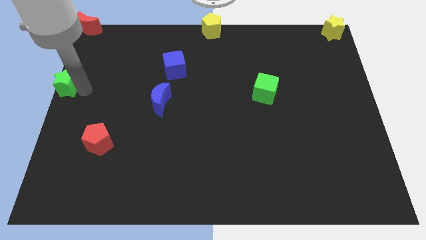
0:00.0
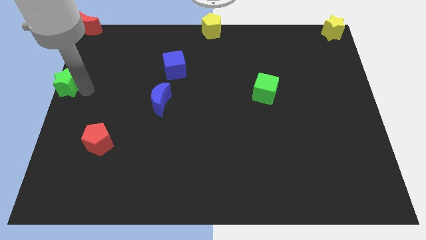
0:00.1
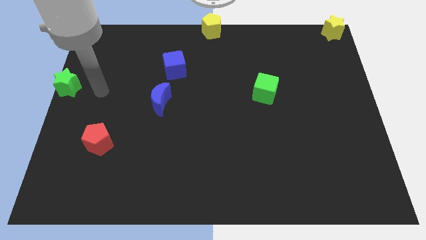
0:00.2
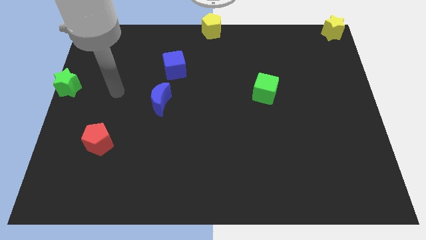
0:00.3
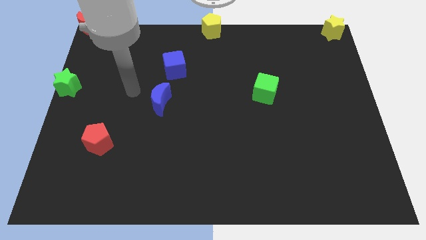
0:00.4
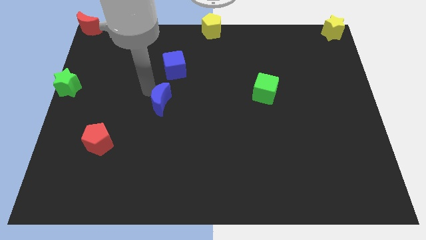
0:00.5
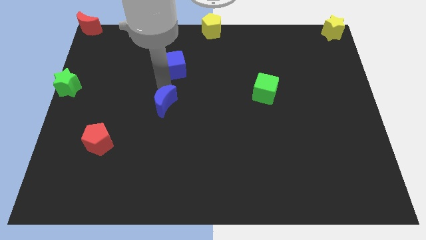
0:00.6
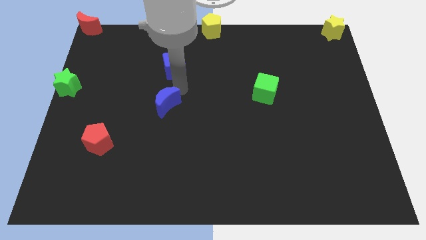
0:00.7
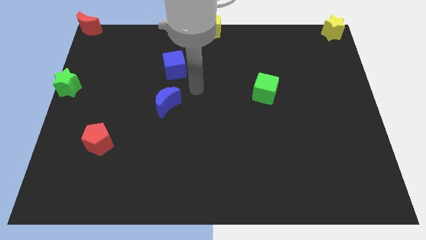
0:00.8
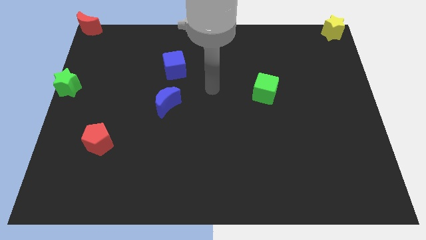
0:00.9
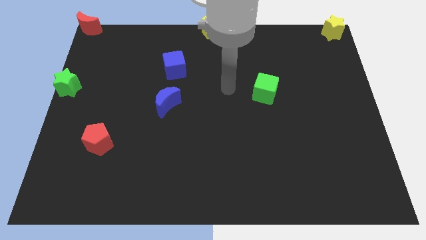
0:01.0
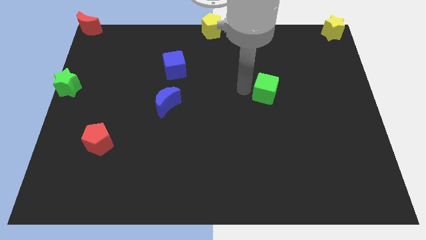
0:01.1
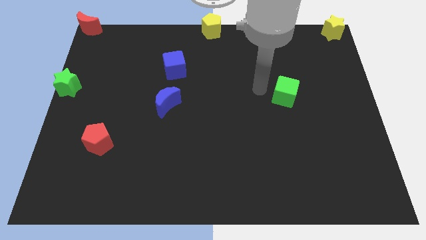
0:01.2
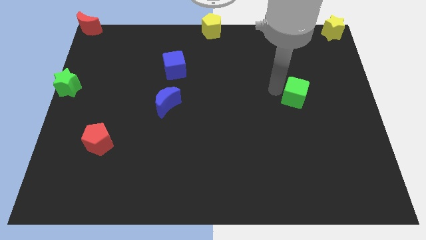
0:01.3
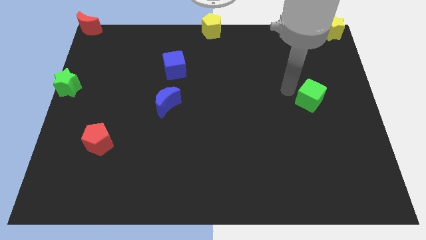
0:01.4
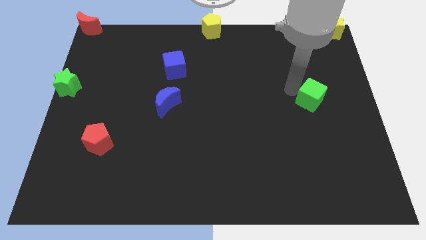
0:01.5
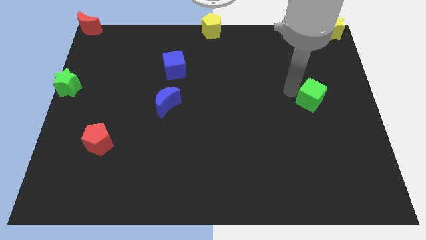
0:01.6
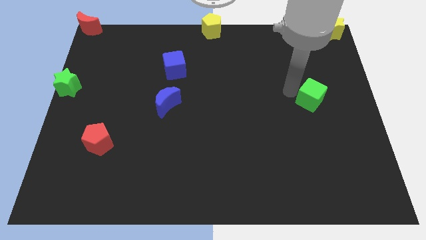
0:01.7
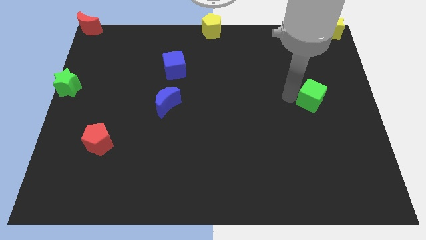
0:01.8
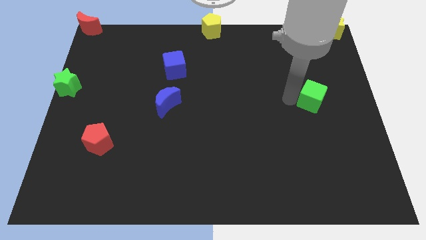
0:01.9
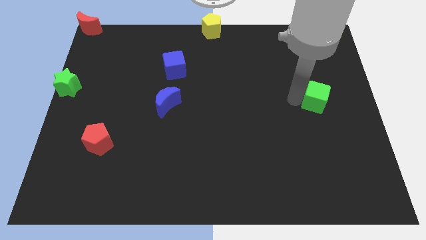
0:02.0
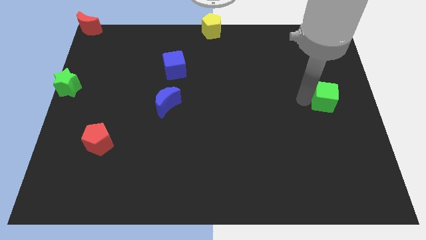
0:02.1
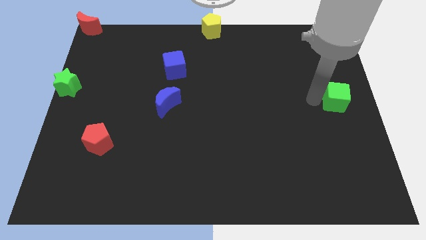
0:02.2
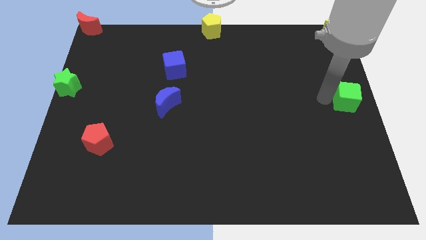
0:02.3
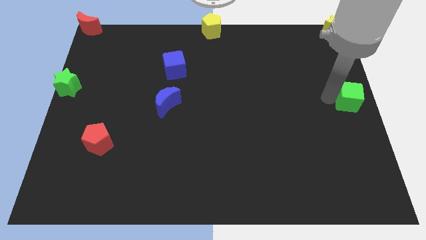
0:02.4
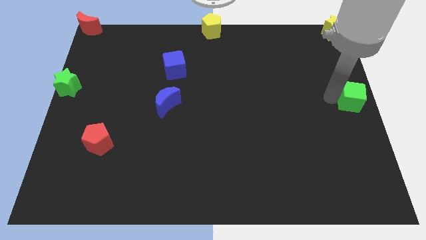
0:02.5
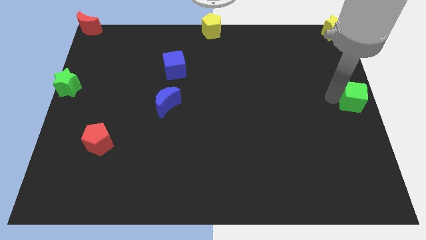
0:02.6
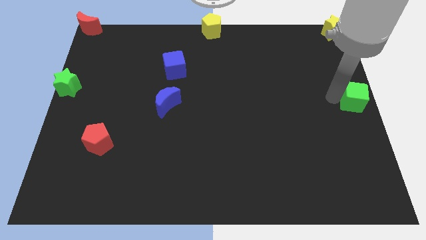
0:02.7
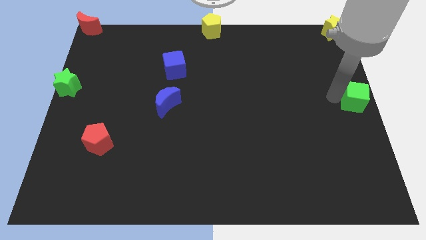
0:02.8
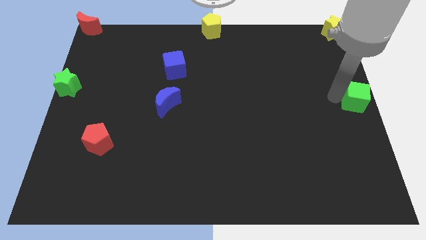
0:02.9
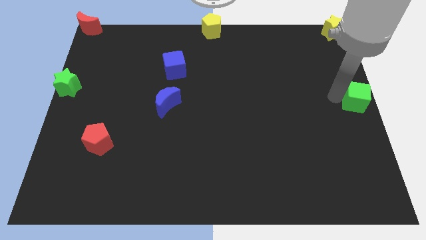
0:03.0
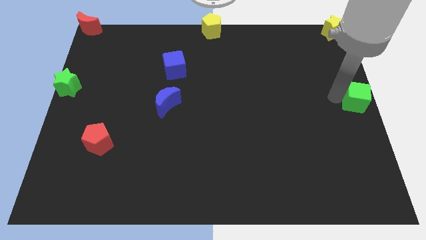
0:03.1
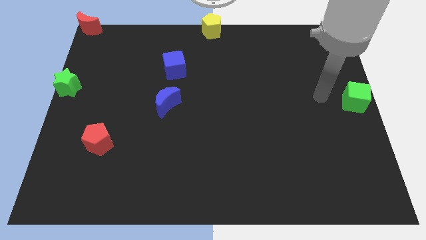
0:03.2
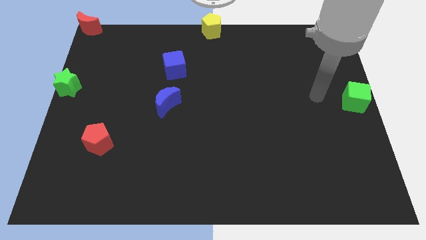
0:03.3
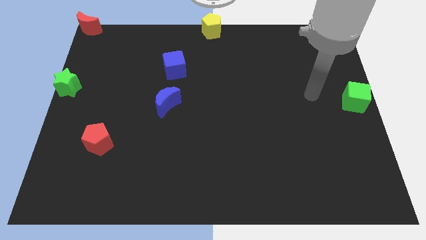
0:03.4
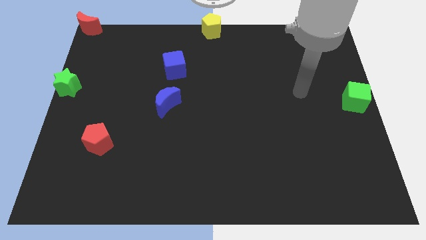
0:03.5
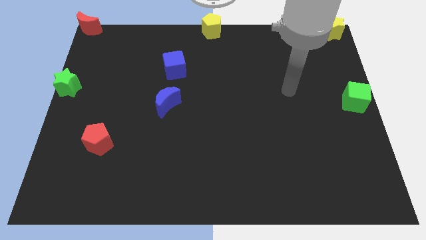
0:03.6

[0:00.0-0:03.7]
push the green cube to the center right of the board

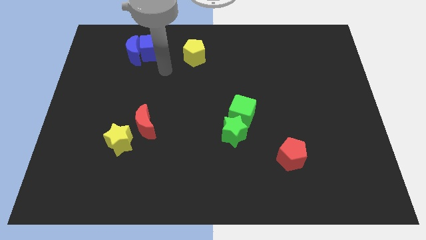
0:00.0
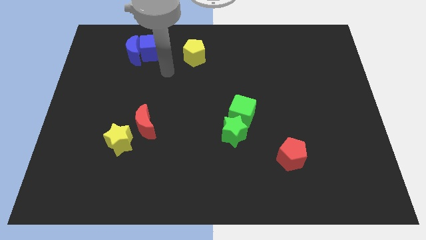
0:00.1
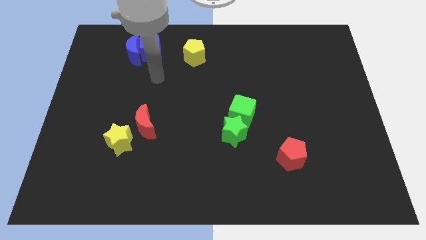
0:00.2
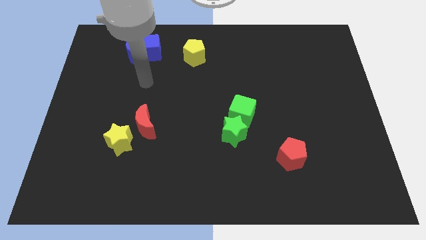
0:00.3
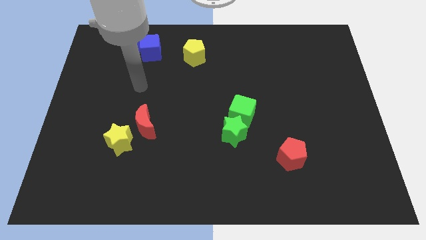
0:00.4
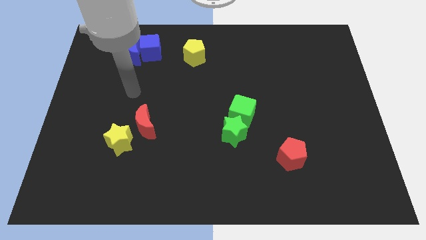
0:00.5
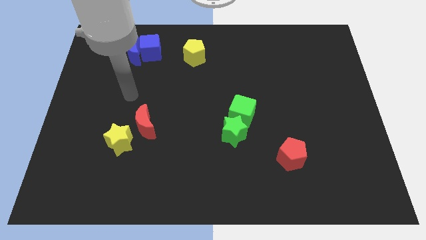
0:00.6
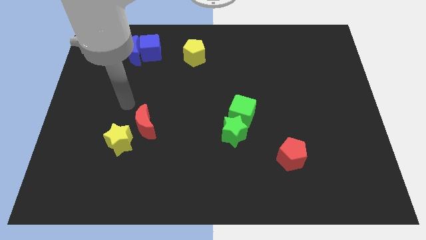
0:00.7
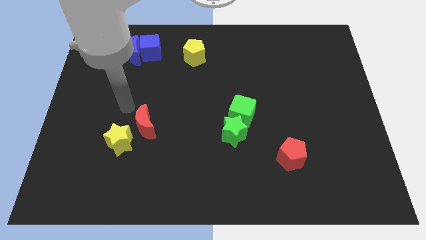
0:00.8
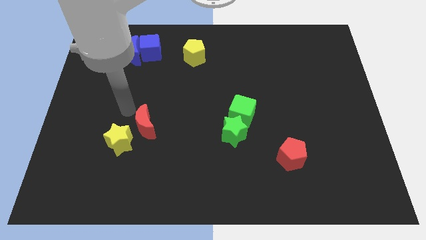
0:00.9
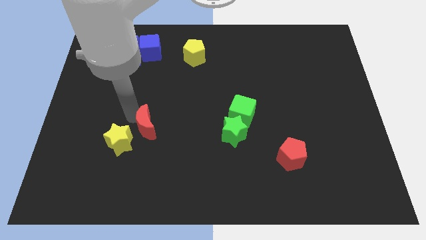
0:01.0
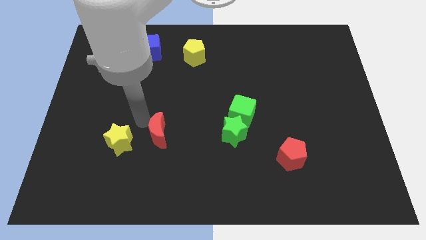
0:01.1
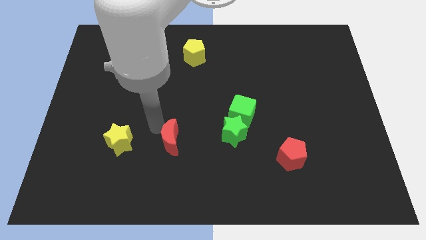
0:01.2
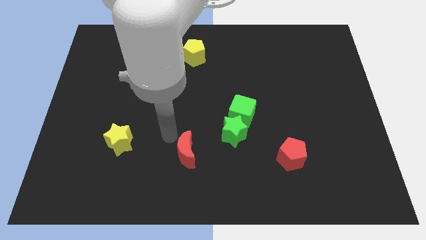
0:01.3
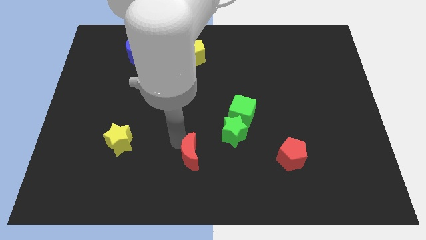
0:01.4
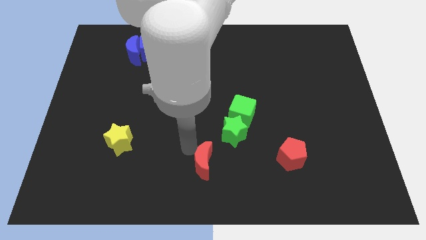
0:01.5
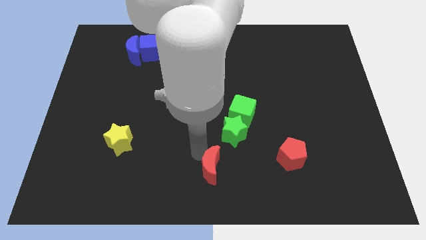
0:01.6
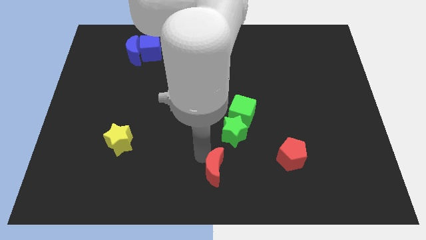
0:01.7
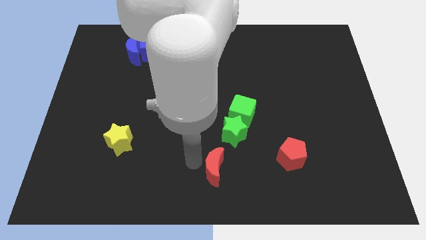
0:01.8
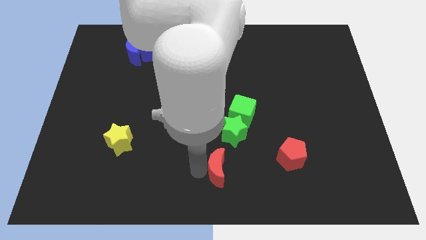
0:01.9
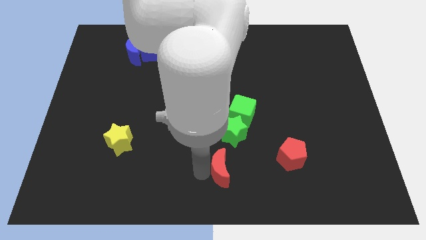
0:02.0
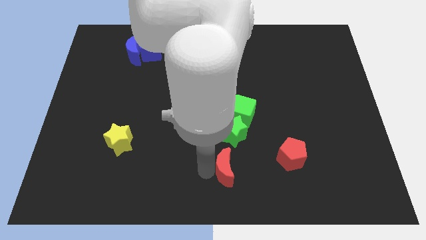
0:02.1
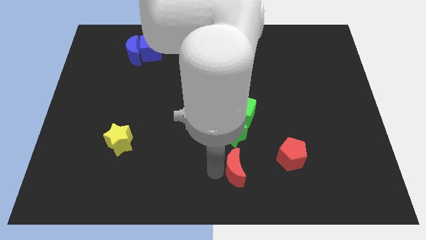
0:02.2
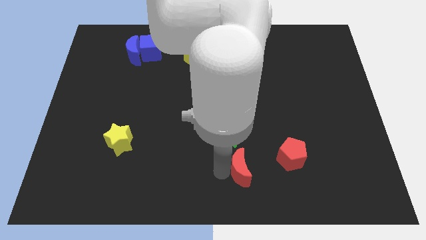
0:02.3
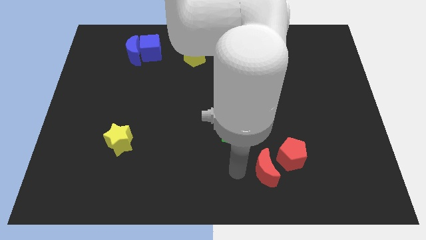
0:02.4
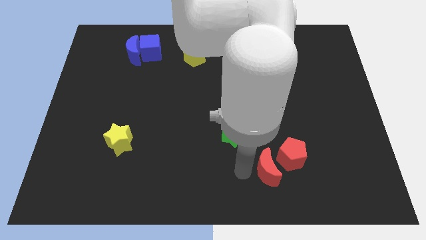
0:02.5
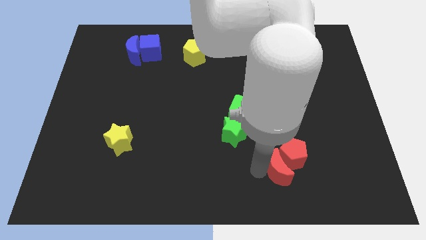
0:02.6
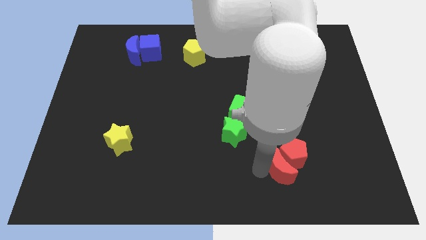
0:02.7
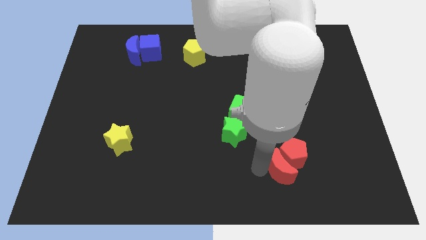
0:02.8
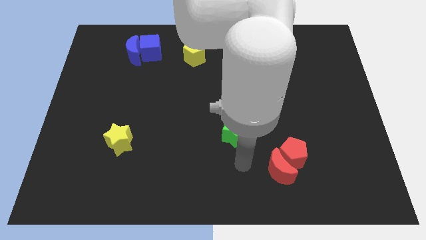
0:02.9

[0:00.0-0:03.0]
push the red moon into the red pentagon

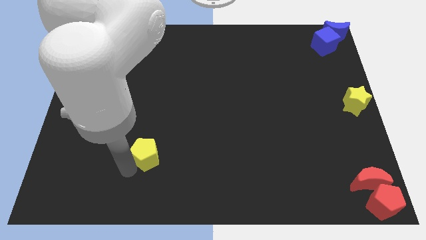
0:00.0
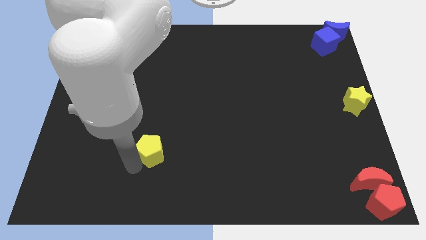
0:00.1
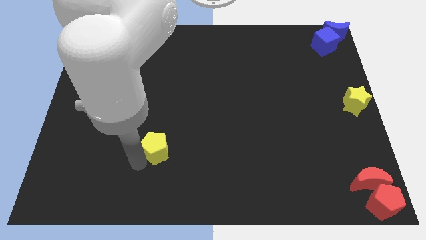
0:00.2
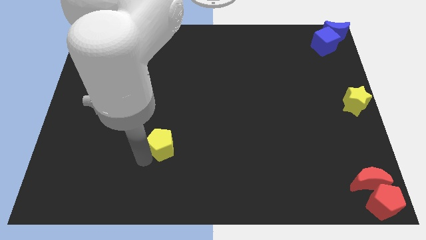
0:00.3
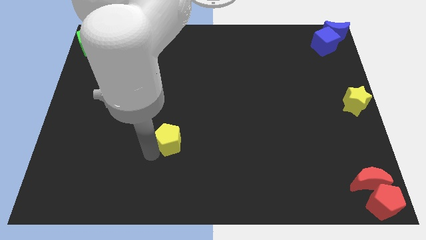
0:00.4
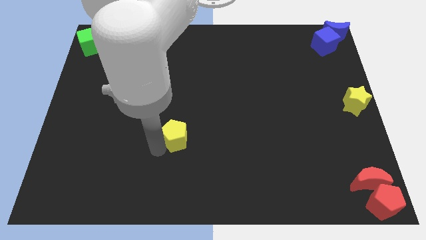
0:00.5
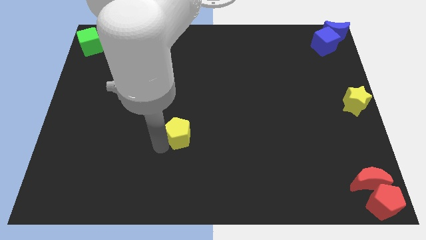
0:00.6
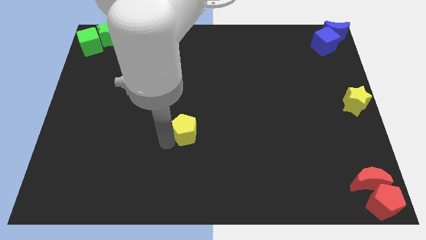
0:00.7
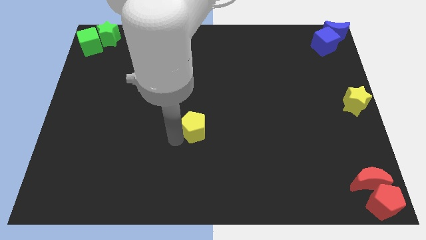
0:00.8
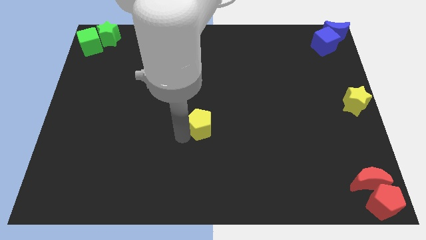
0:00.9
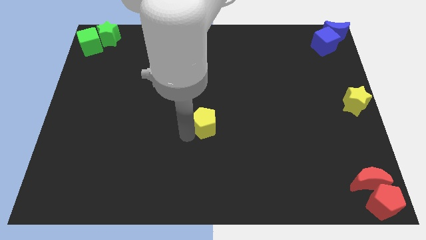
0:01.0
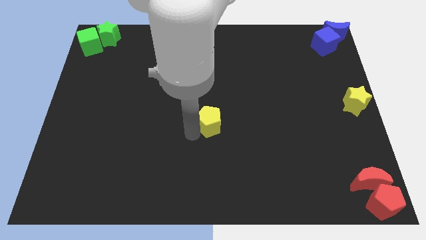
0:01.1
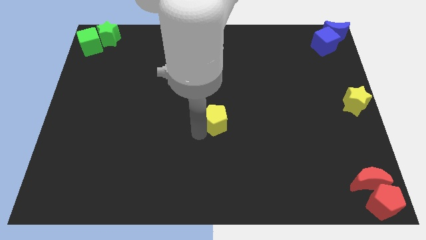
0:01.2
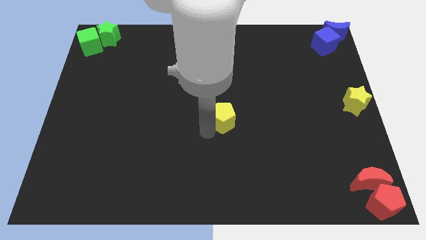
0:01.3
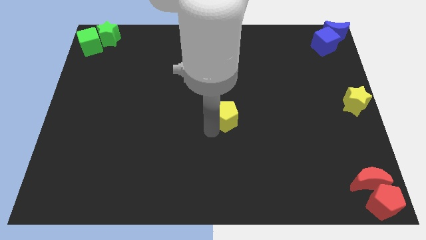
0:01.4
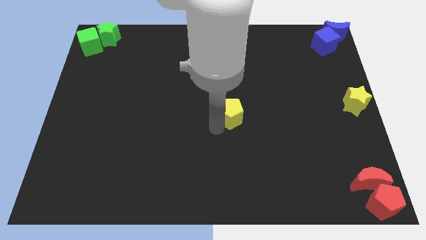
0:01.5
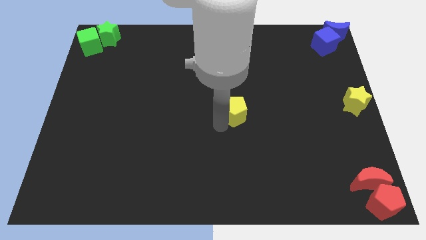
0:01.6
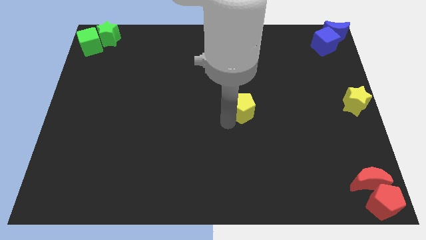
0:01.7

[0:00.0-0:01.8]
push the yellow pentagon to the center of the board

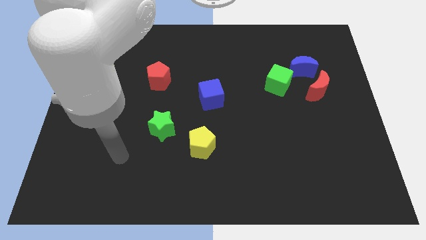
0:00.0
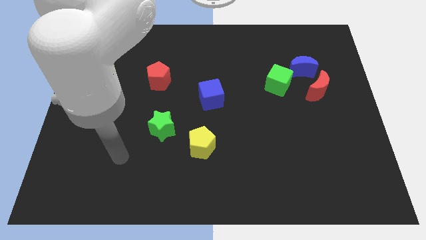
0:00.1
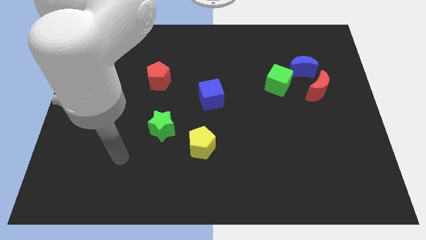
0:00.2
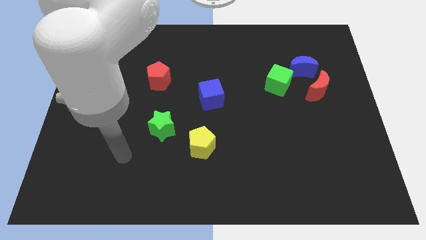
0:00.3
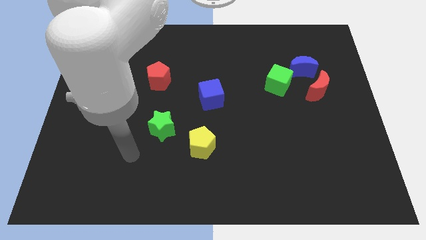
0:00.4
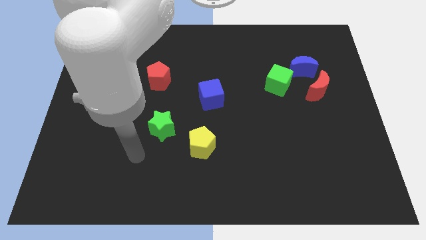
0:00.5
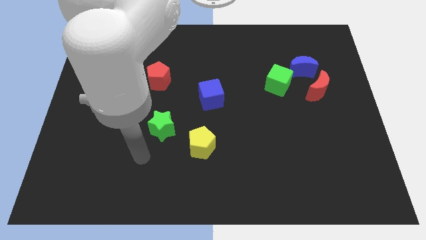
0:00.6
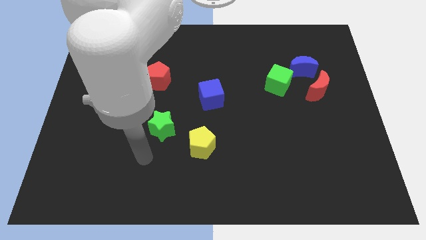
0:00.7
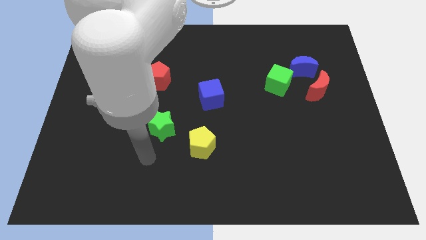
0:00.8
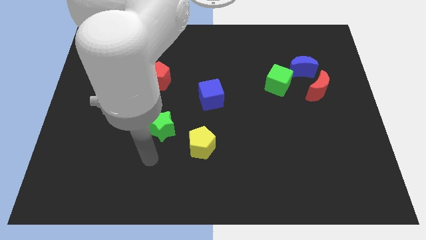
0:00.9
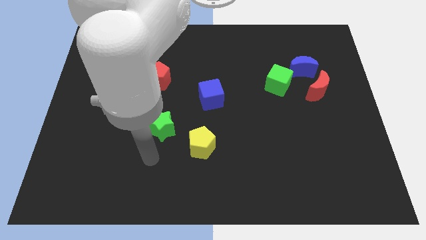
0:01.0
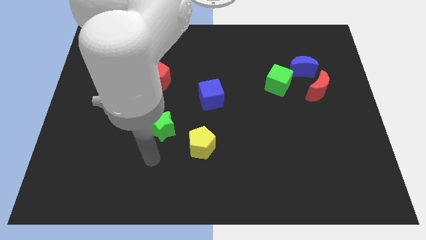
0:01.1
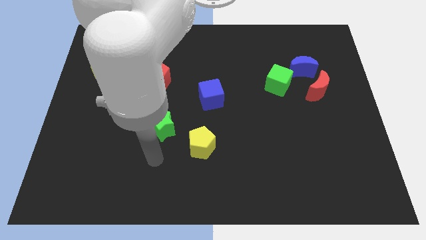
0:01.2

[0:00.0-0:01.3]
move your arm to the bottom side of the green star
